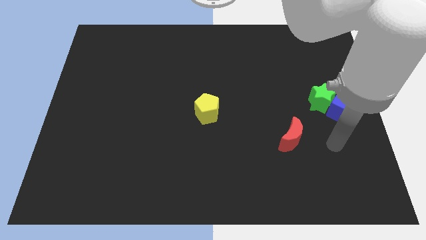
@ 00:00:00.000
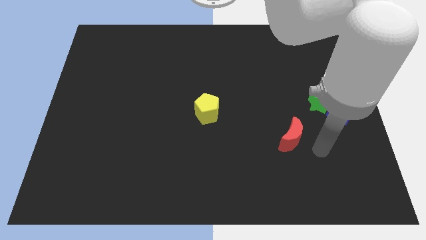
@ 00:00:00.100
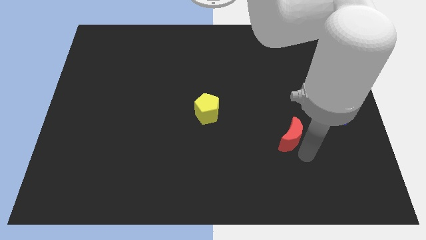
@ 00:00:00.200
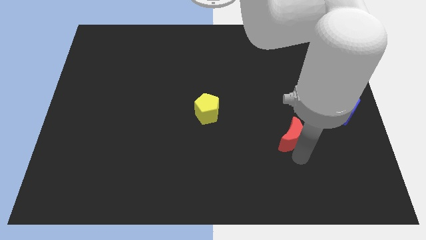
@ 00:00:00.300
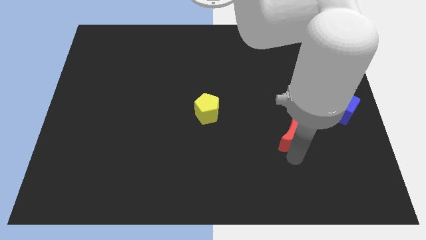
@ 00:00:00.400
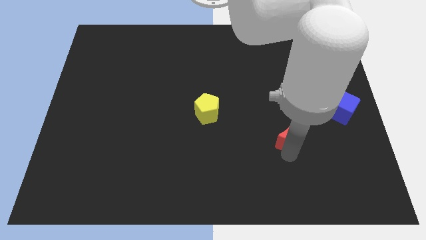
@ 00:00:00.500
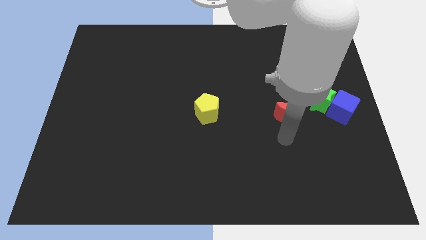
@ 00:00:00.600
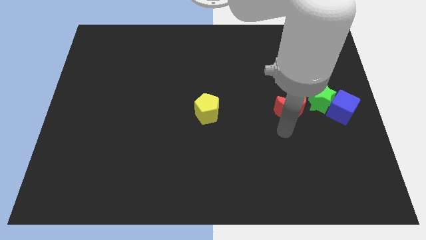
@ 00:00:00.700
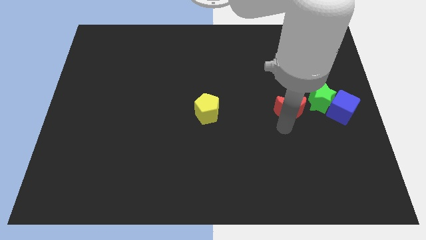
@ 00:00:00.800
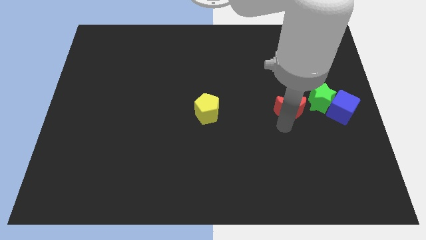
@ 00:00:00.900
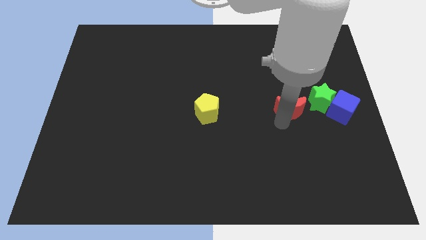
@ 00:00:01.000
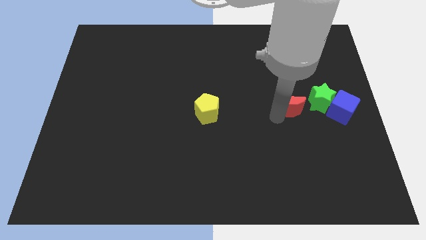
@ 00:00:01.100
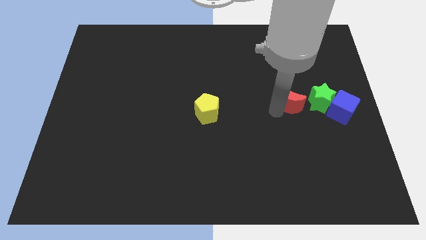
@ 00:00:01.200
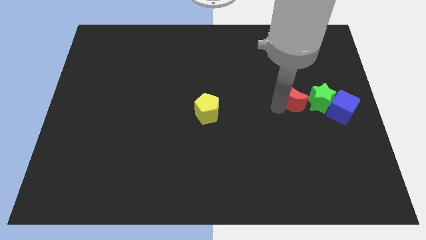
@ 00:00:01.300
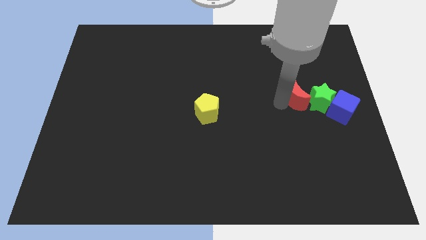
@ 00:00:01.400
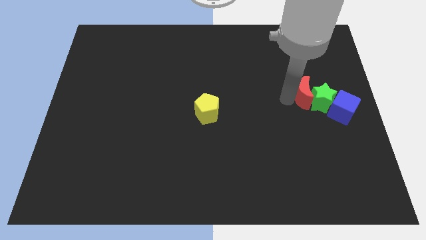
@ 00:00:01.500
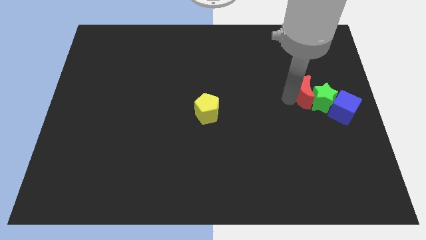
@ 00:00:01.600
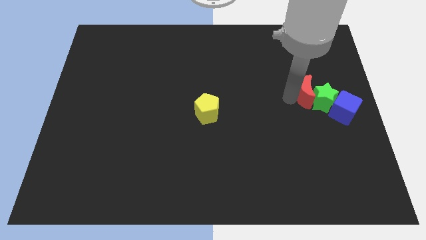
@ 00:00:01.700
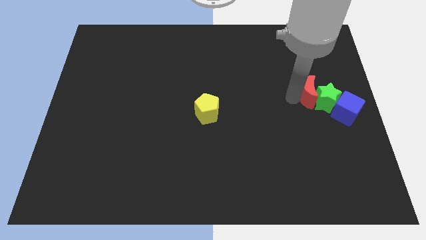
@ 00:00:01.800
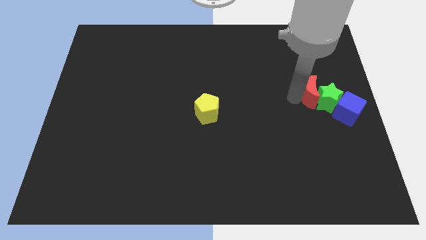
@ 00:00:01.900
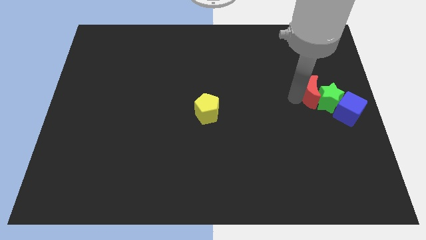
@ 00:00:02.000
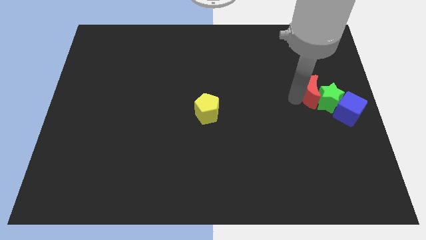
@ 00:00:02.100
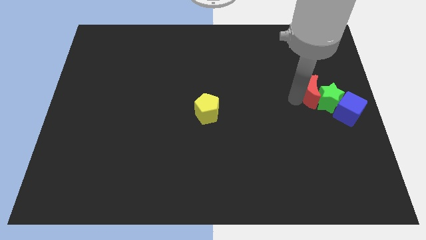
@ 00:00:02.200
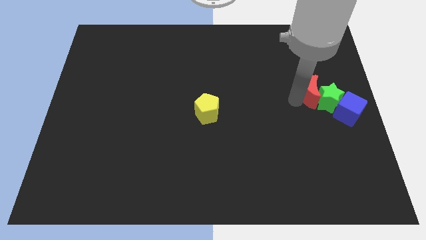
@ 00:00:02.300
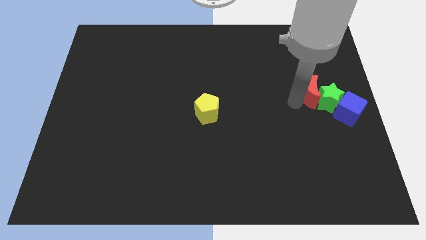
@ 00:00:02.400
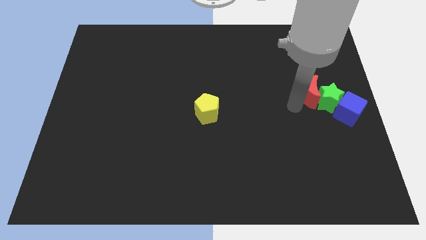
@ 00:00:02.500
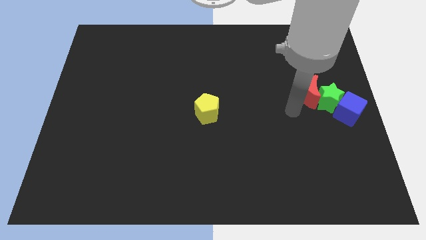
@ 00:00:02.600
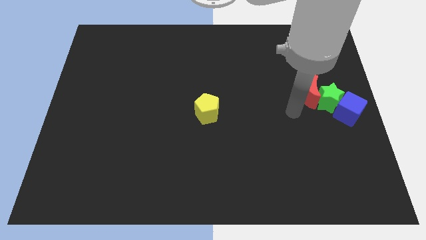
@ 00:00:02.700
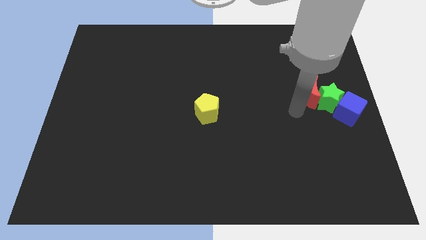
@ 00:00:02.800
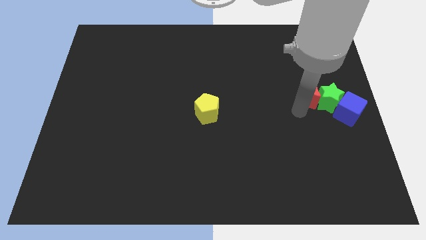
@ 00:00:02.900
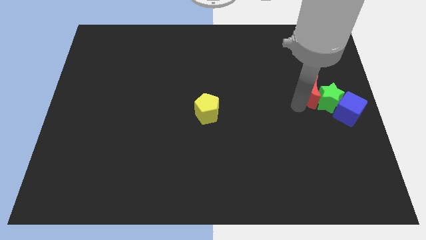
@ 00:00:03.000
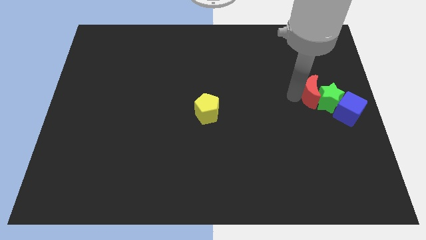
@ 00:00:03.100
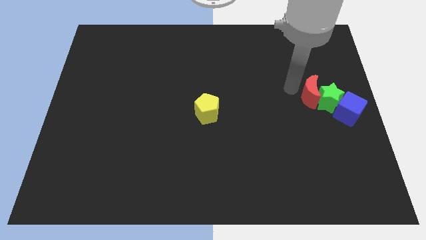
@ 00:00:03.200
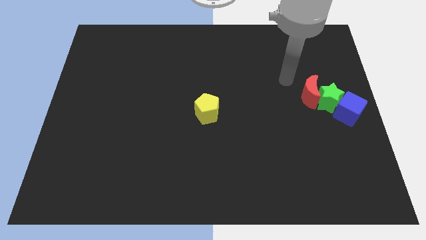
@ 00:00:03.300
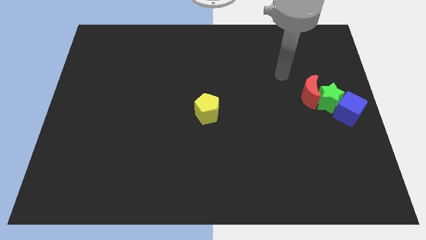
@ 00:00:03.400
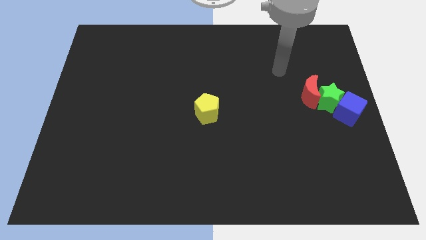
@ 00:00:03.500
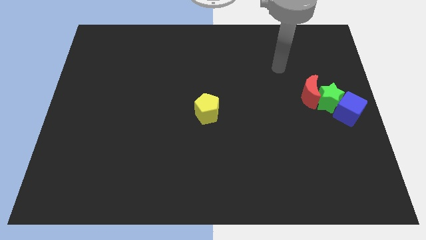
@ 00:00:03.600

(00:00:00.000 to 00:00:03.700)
slide the red block close to the blue cube

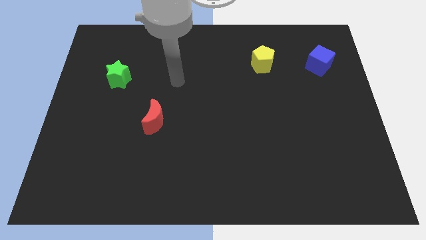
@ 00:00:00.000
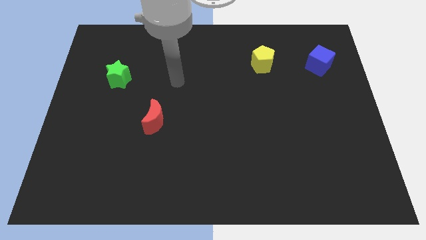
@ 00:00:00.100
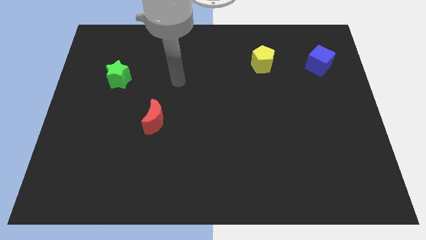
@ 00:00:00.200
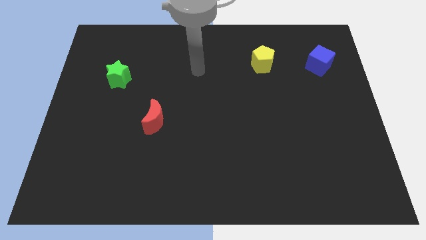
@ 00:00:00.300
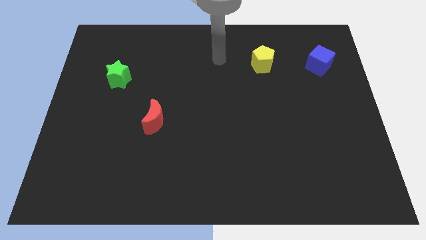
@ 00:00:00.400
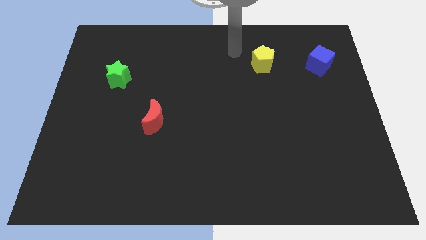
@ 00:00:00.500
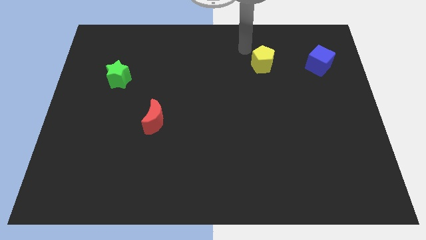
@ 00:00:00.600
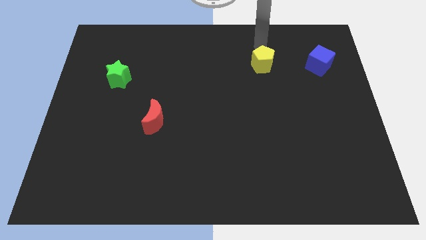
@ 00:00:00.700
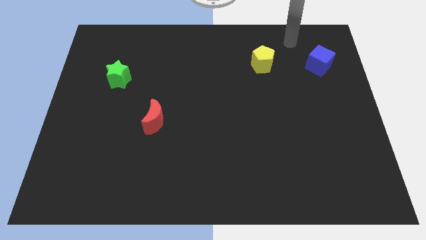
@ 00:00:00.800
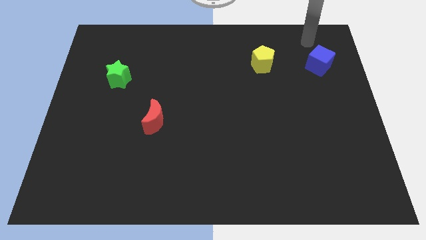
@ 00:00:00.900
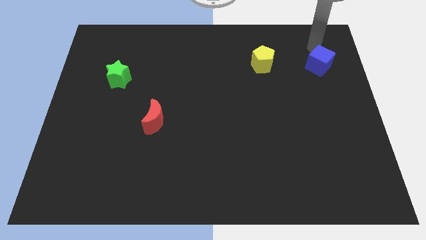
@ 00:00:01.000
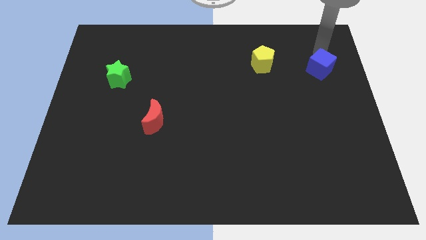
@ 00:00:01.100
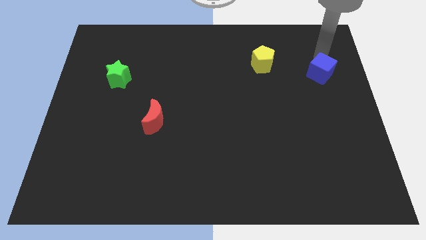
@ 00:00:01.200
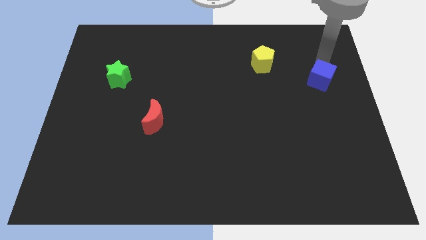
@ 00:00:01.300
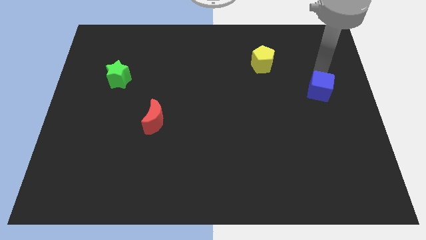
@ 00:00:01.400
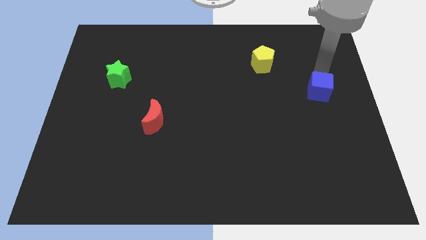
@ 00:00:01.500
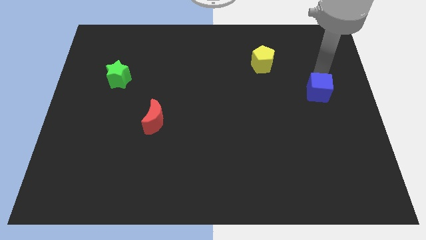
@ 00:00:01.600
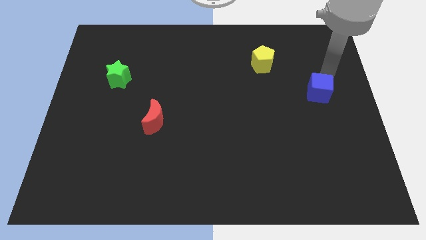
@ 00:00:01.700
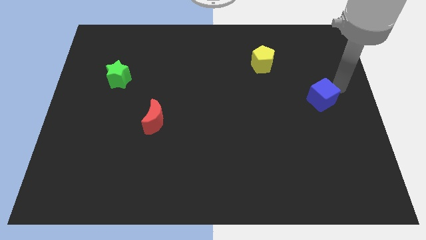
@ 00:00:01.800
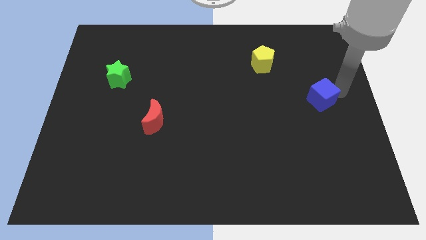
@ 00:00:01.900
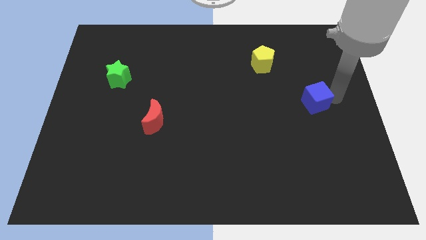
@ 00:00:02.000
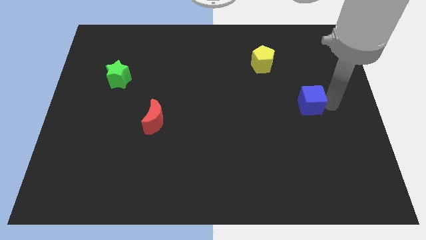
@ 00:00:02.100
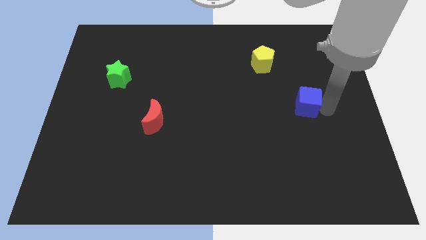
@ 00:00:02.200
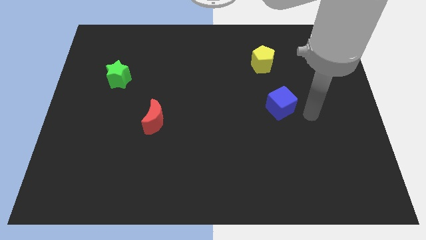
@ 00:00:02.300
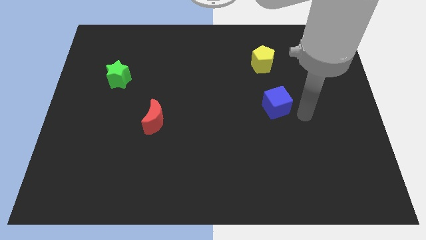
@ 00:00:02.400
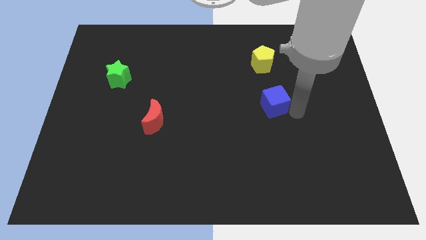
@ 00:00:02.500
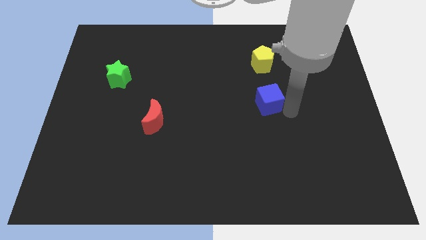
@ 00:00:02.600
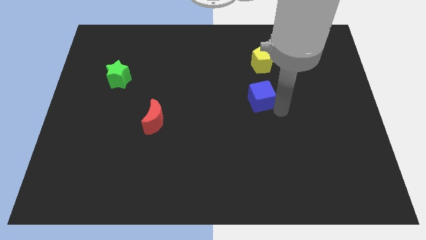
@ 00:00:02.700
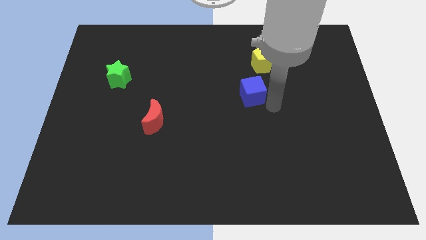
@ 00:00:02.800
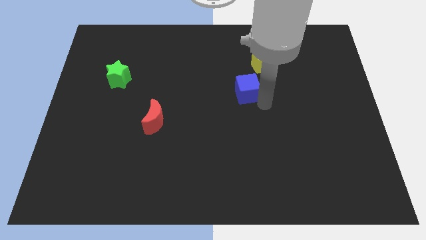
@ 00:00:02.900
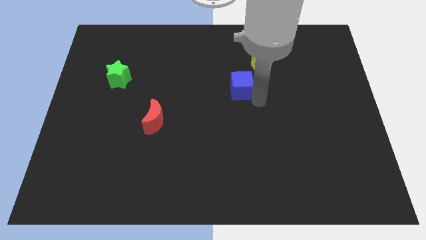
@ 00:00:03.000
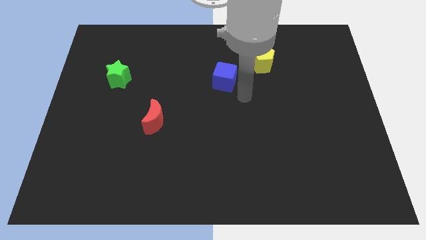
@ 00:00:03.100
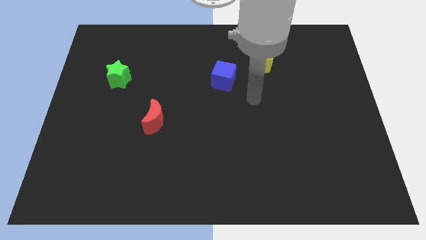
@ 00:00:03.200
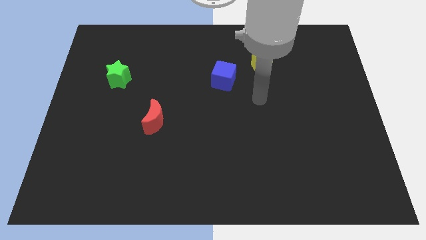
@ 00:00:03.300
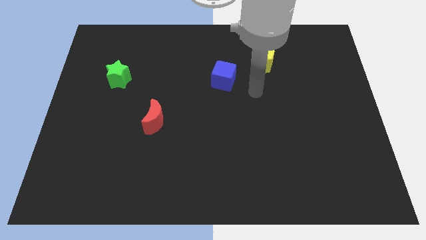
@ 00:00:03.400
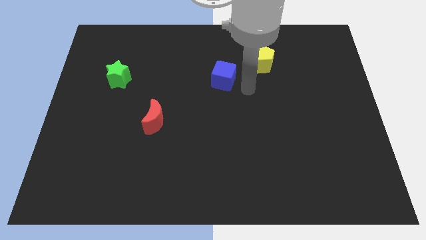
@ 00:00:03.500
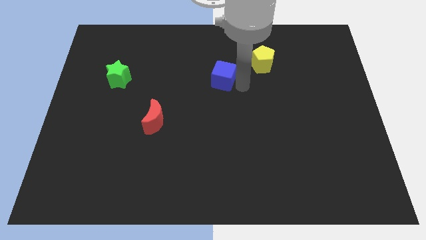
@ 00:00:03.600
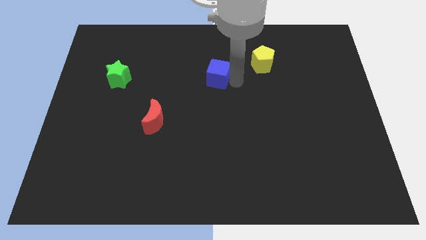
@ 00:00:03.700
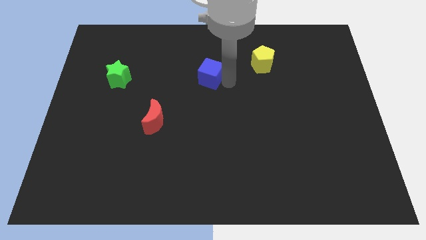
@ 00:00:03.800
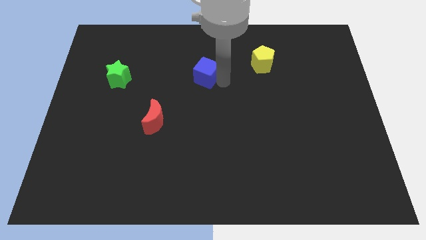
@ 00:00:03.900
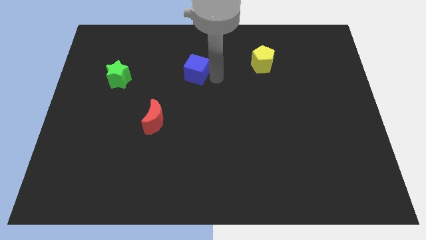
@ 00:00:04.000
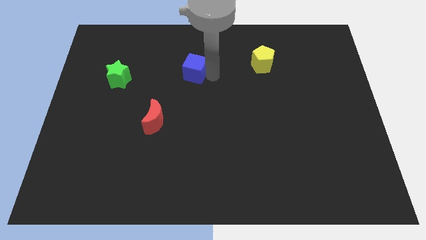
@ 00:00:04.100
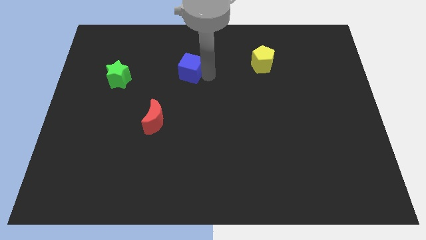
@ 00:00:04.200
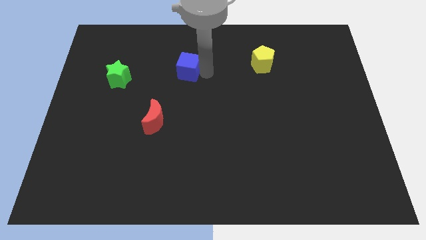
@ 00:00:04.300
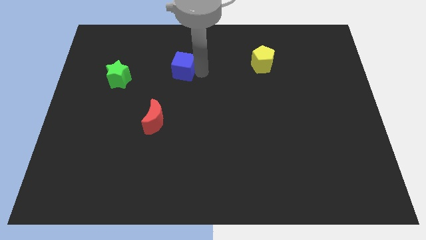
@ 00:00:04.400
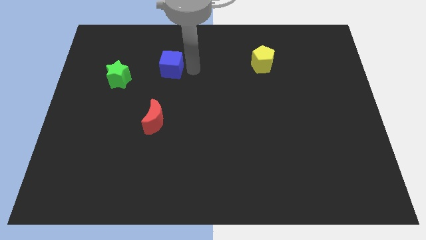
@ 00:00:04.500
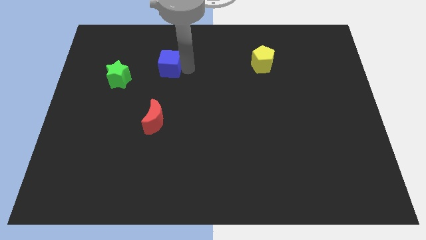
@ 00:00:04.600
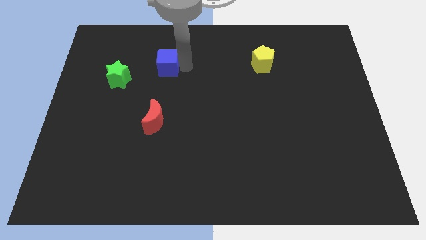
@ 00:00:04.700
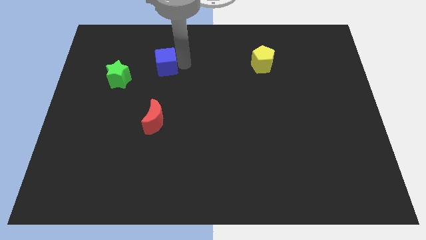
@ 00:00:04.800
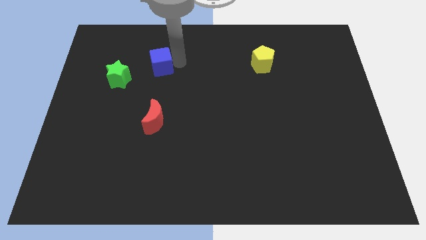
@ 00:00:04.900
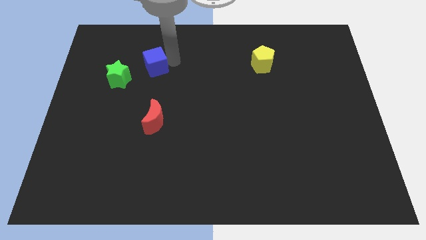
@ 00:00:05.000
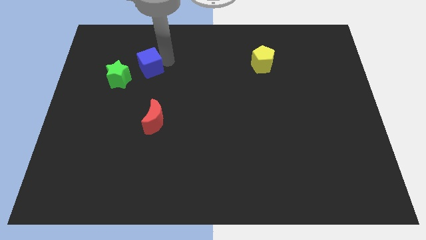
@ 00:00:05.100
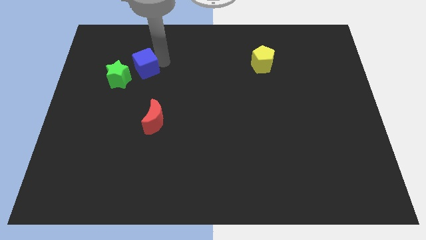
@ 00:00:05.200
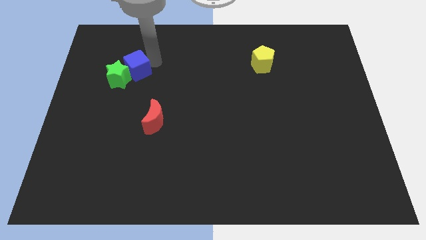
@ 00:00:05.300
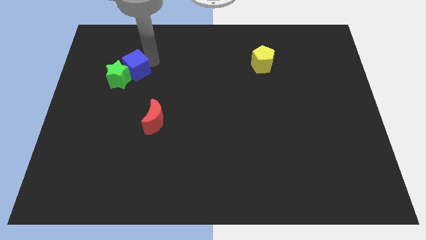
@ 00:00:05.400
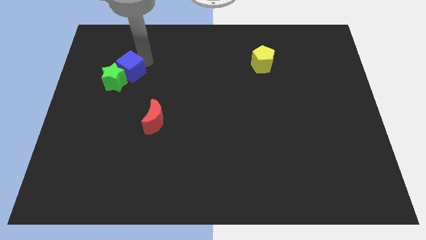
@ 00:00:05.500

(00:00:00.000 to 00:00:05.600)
move the blue cube close to the green block
